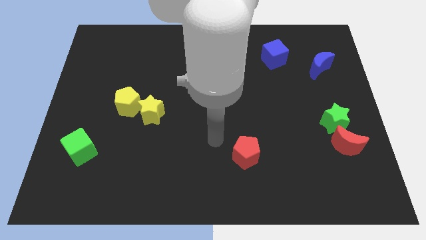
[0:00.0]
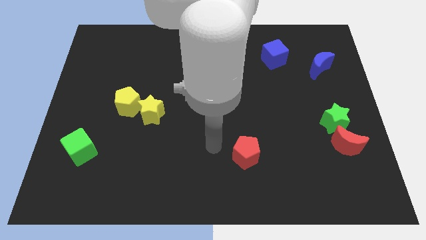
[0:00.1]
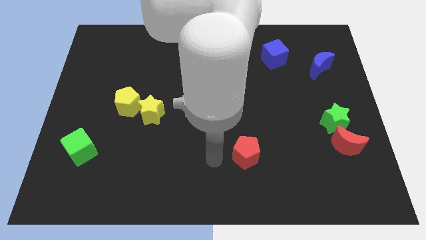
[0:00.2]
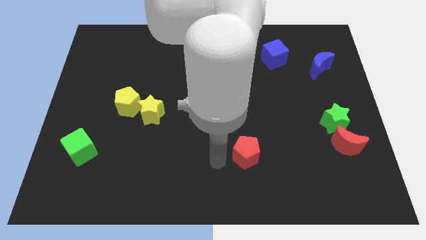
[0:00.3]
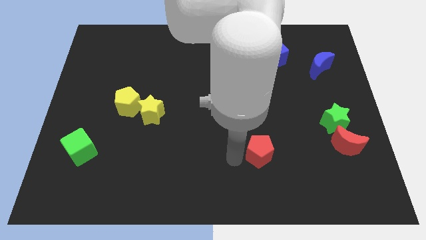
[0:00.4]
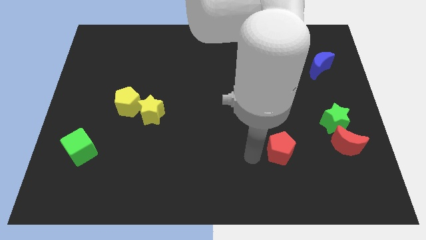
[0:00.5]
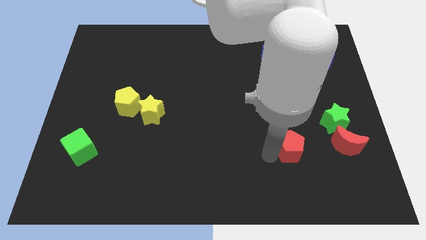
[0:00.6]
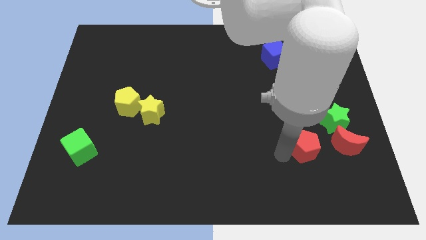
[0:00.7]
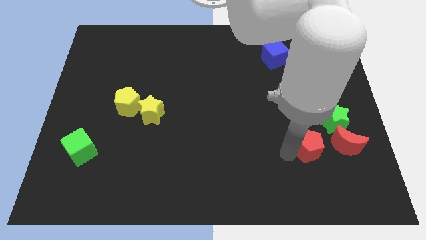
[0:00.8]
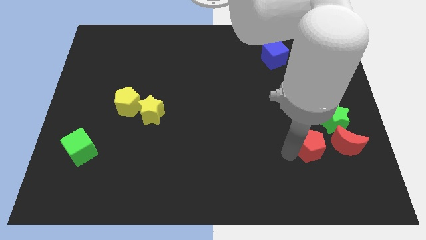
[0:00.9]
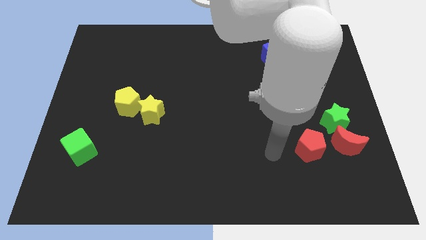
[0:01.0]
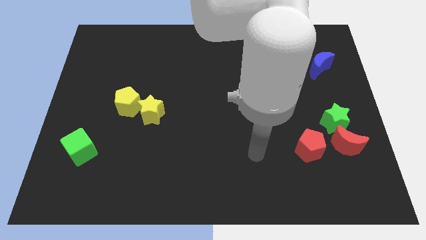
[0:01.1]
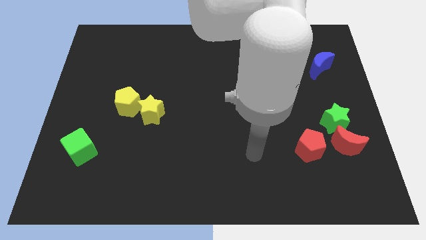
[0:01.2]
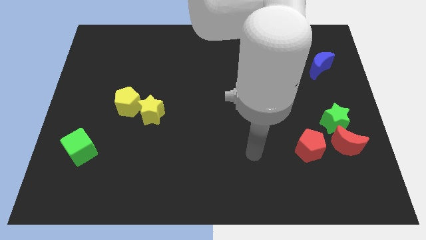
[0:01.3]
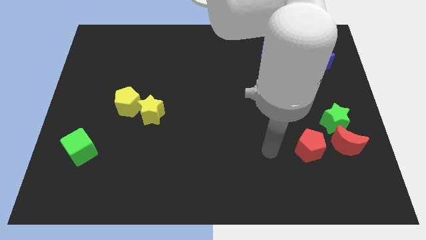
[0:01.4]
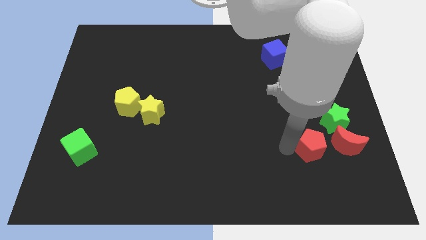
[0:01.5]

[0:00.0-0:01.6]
place the red pentagon to the left side of the red moon

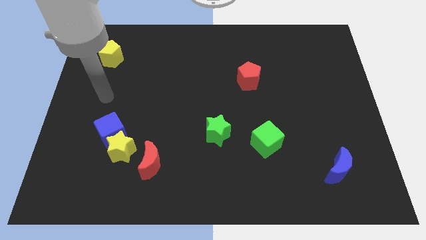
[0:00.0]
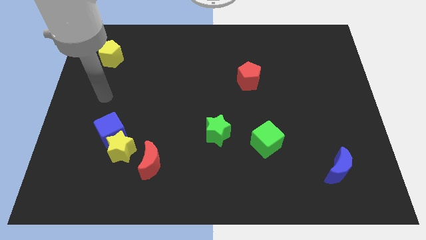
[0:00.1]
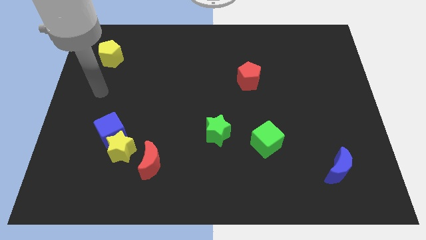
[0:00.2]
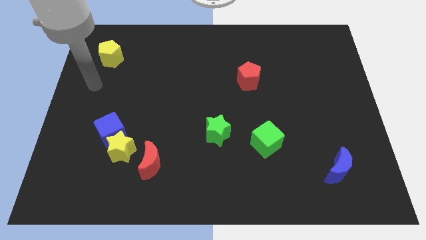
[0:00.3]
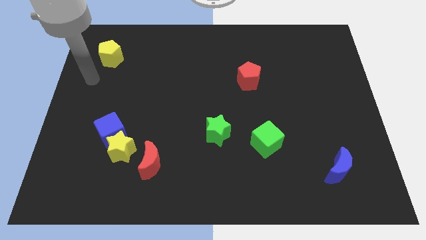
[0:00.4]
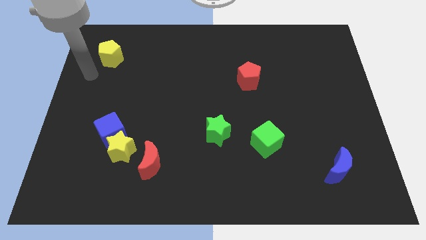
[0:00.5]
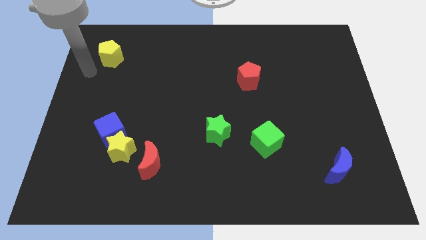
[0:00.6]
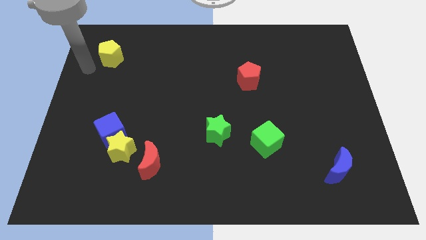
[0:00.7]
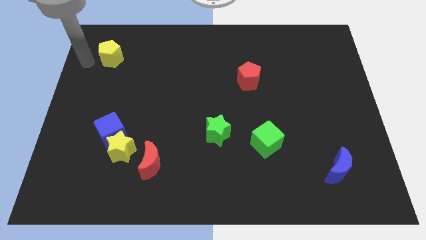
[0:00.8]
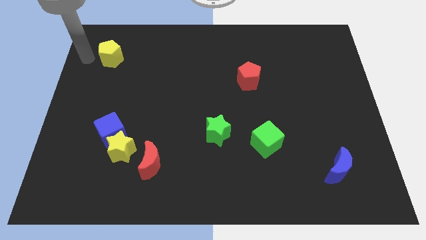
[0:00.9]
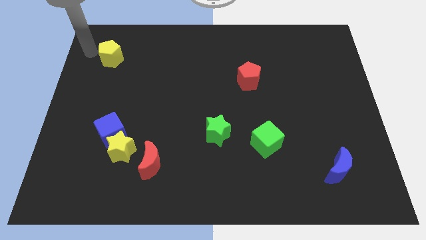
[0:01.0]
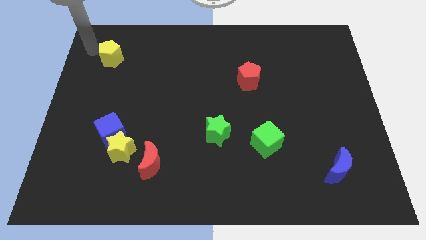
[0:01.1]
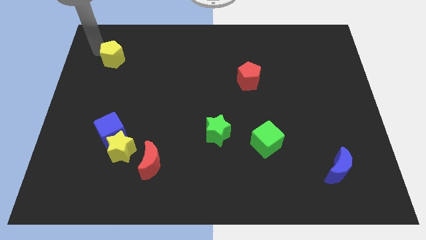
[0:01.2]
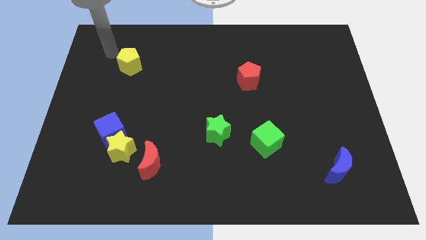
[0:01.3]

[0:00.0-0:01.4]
hit the yellow pentagon with the arm

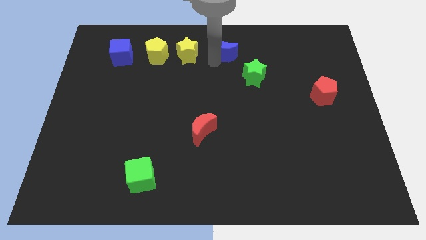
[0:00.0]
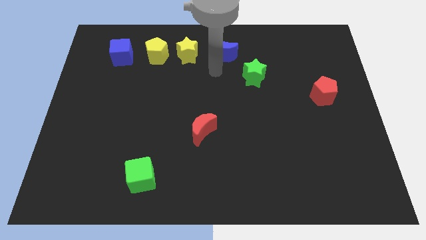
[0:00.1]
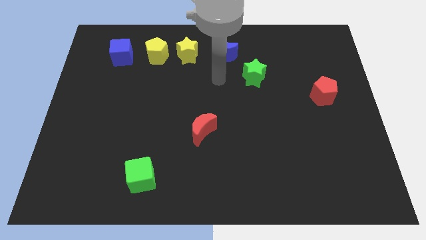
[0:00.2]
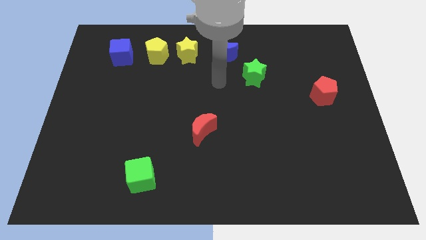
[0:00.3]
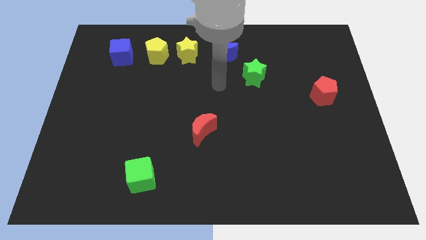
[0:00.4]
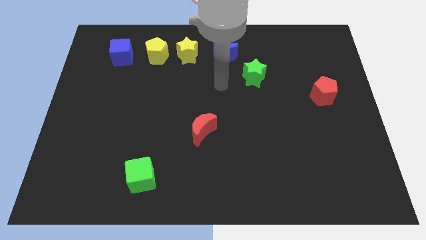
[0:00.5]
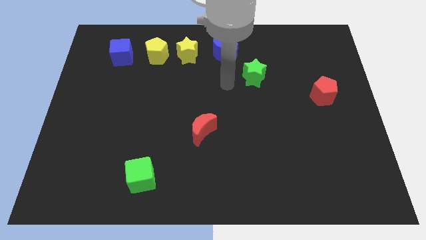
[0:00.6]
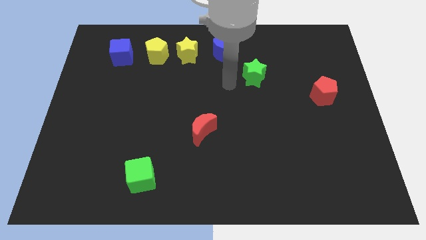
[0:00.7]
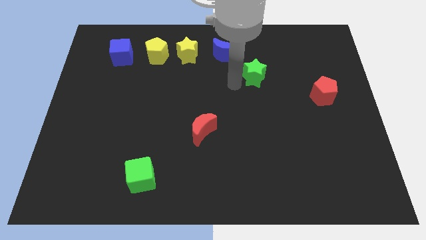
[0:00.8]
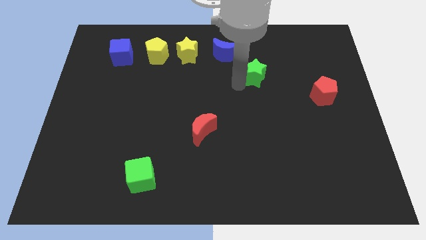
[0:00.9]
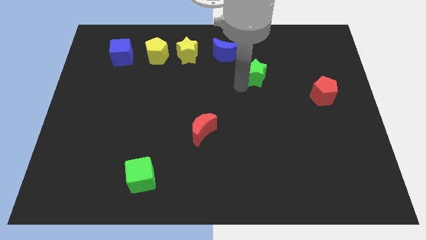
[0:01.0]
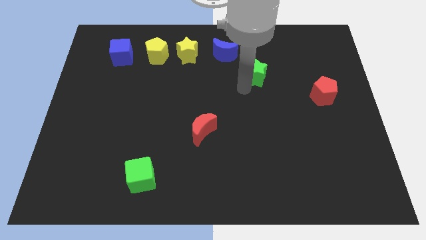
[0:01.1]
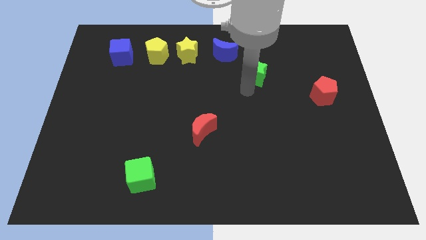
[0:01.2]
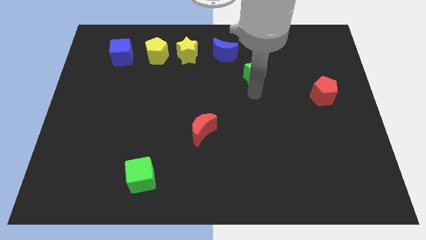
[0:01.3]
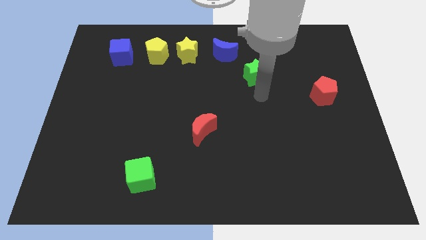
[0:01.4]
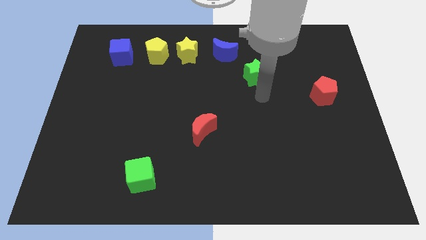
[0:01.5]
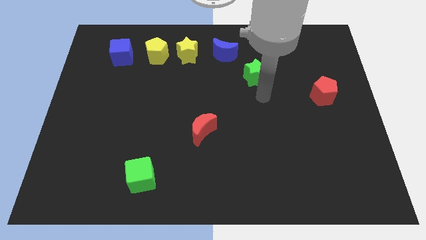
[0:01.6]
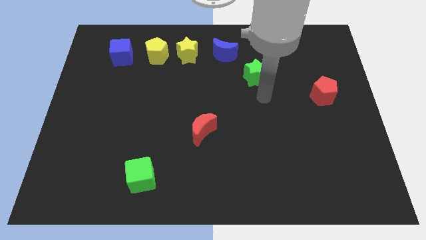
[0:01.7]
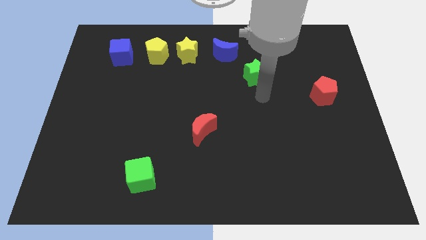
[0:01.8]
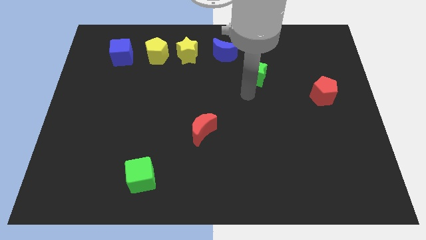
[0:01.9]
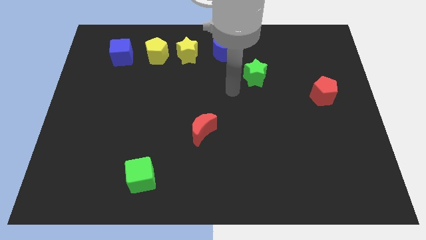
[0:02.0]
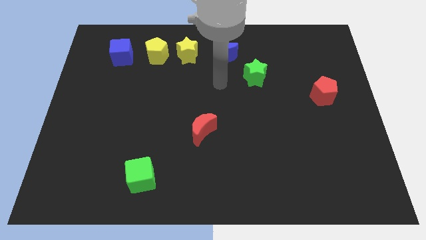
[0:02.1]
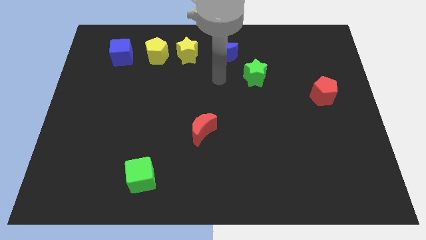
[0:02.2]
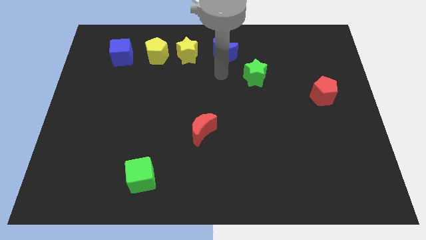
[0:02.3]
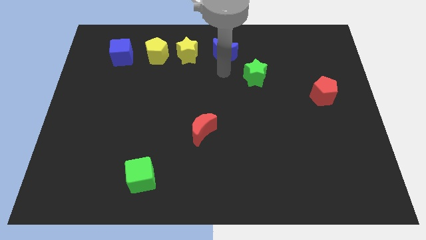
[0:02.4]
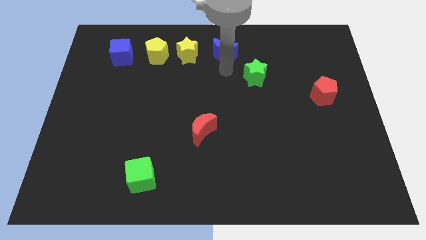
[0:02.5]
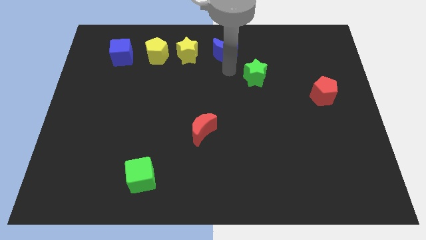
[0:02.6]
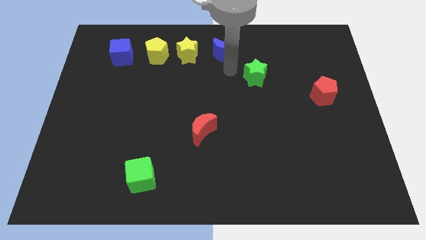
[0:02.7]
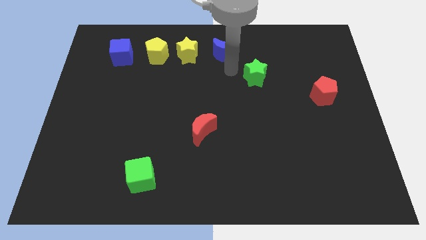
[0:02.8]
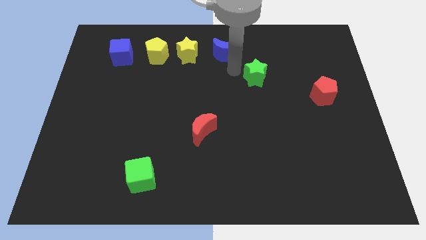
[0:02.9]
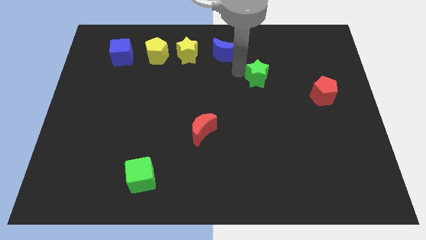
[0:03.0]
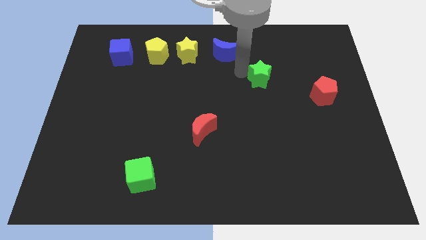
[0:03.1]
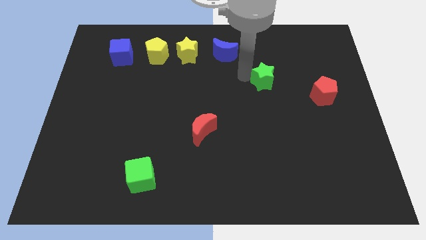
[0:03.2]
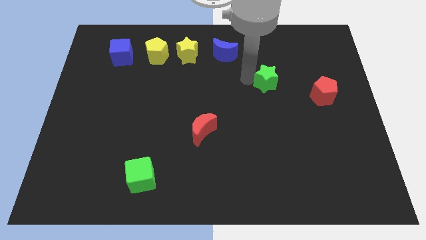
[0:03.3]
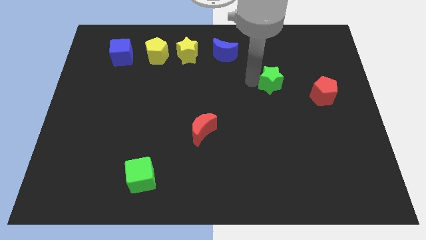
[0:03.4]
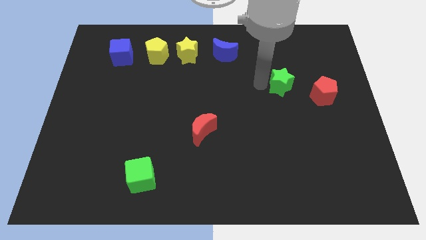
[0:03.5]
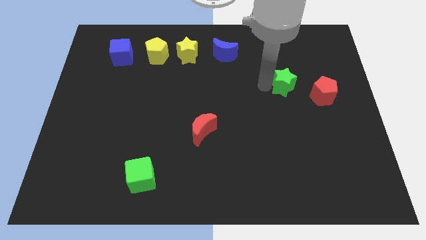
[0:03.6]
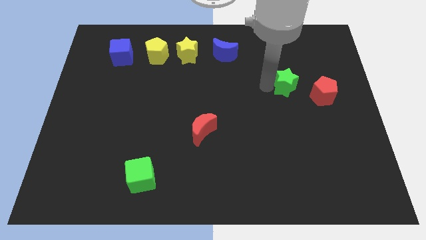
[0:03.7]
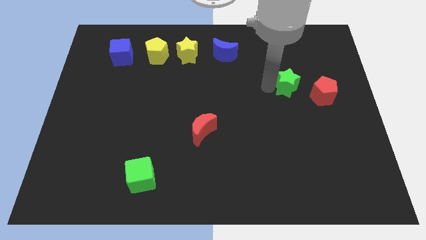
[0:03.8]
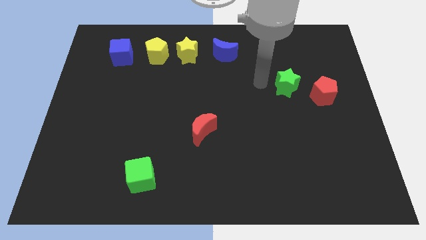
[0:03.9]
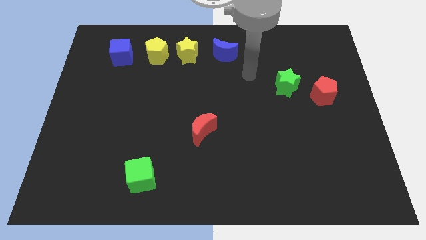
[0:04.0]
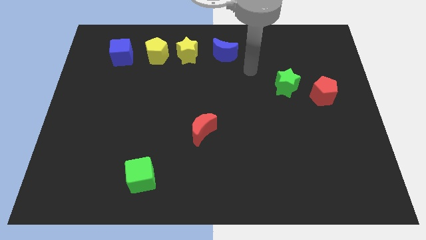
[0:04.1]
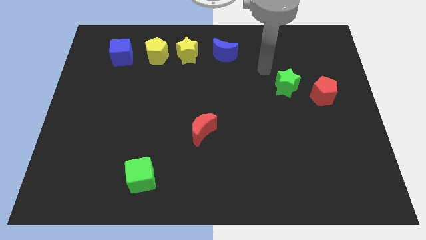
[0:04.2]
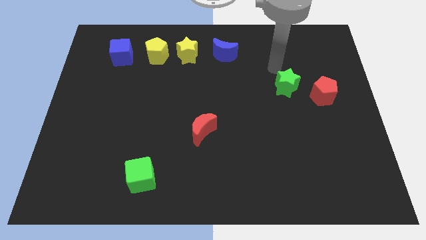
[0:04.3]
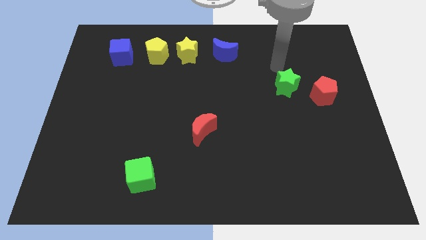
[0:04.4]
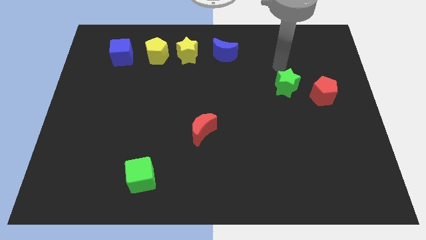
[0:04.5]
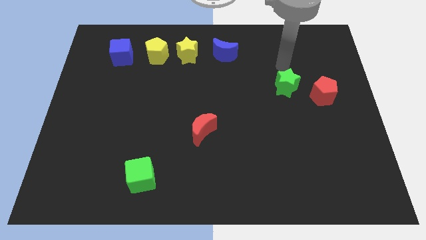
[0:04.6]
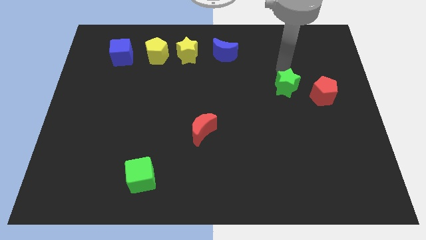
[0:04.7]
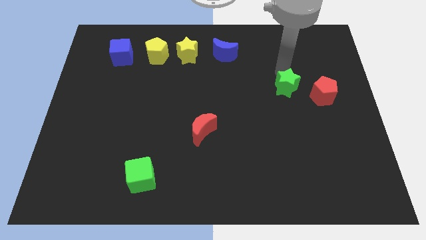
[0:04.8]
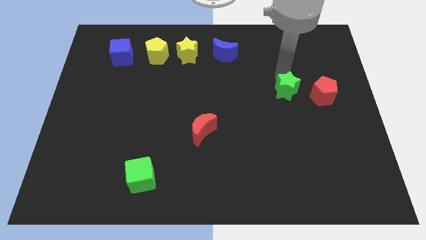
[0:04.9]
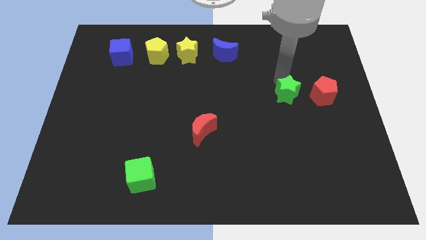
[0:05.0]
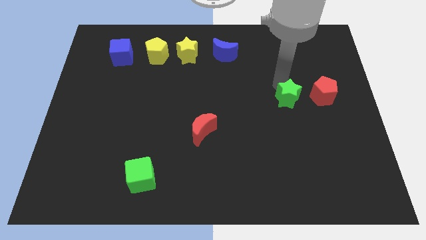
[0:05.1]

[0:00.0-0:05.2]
place the green star parallel to red pentagon

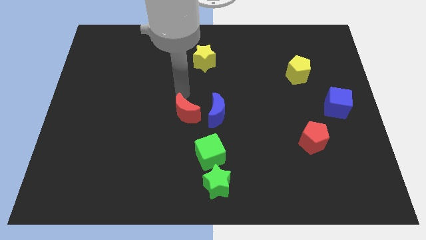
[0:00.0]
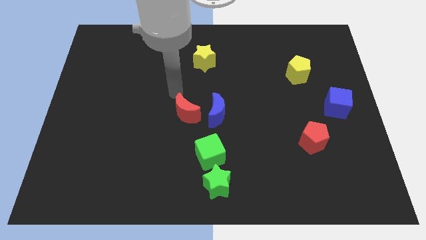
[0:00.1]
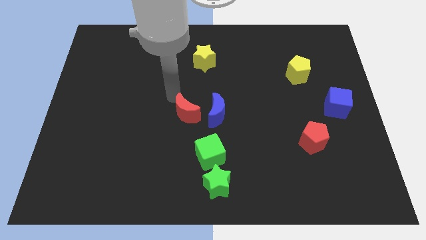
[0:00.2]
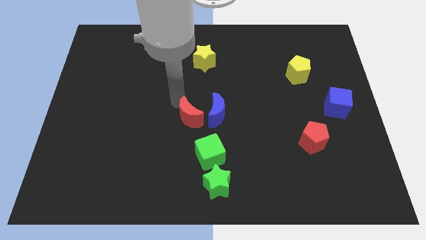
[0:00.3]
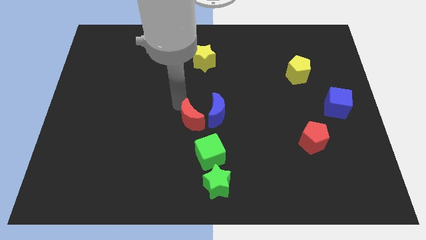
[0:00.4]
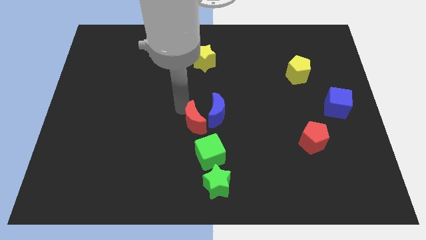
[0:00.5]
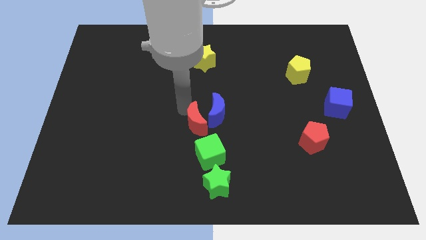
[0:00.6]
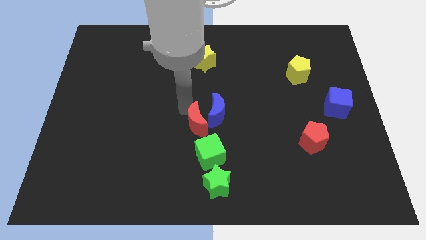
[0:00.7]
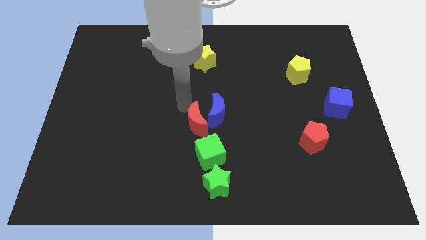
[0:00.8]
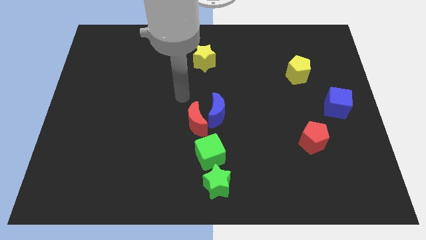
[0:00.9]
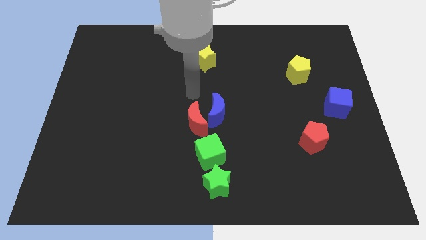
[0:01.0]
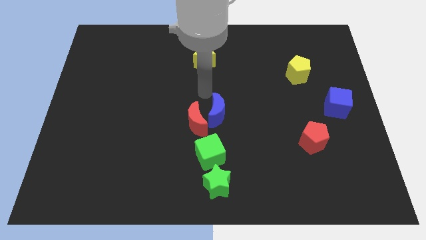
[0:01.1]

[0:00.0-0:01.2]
push the red crescent close to the green cube
